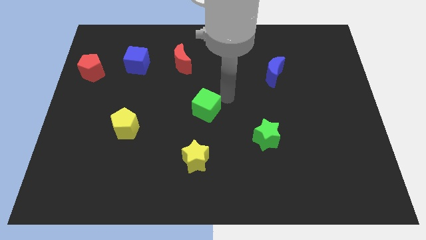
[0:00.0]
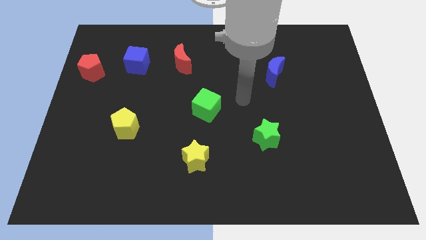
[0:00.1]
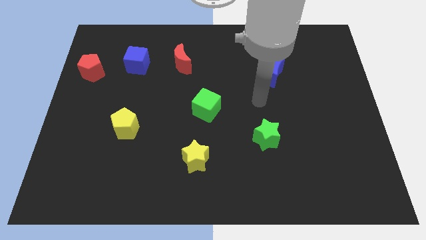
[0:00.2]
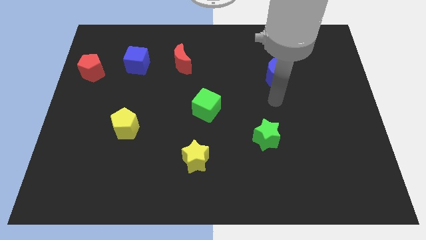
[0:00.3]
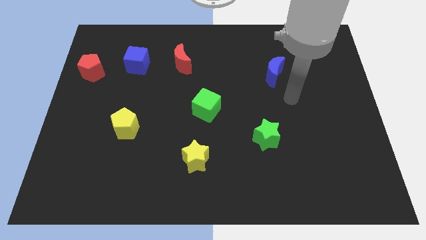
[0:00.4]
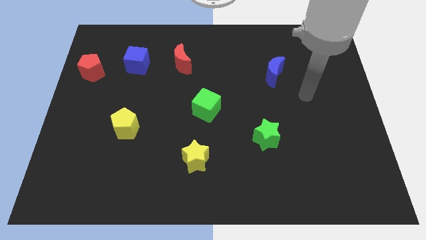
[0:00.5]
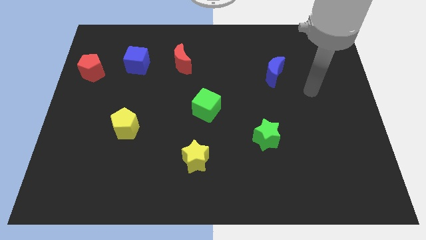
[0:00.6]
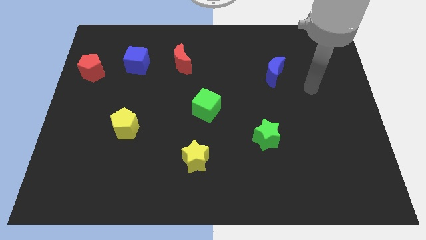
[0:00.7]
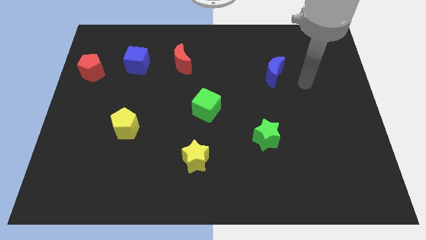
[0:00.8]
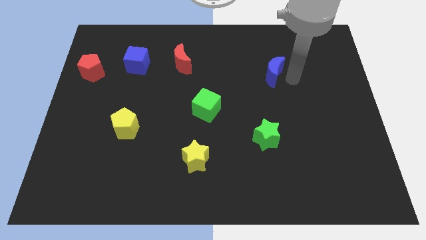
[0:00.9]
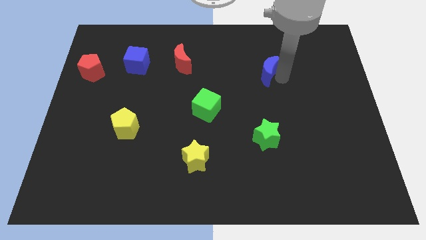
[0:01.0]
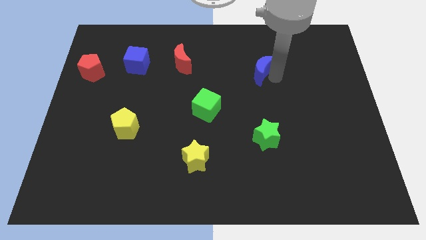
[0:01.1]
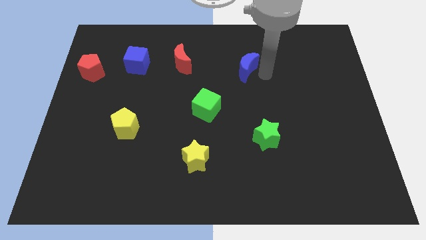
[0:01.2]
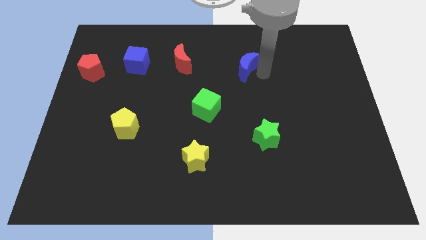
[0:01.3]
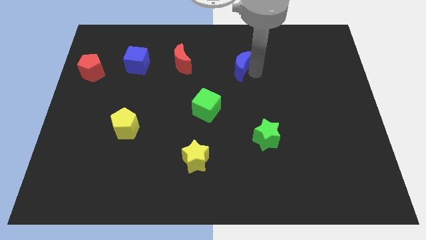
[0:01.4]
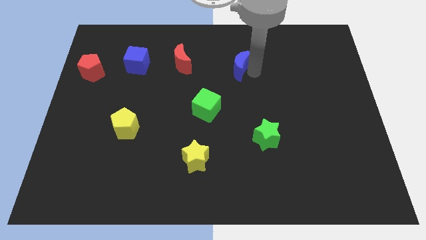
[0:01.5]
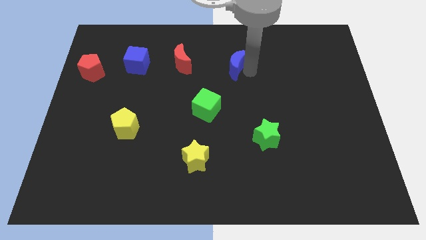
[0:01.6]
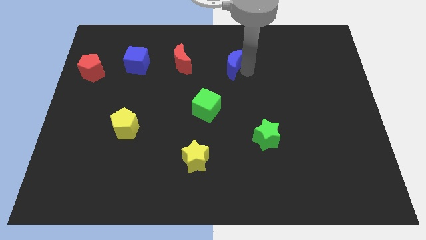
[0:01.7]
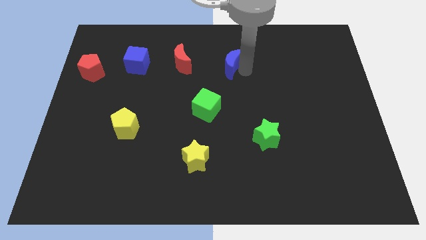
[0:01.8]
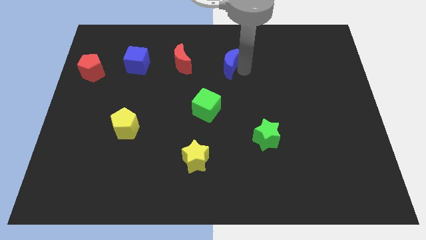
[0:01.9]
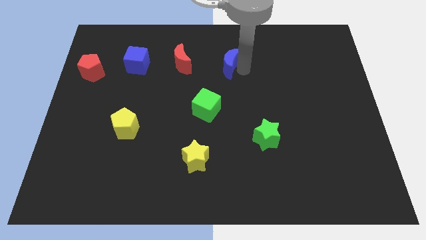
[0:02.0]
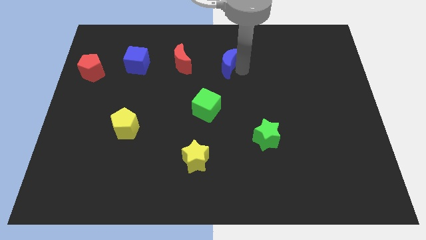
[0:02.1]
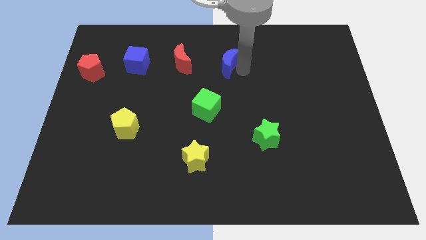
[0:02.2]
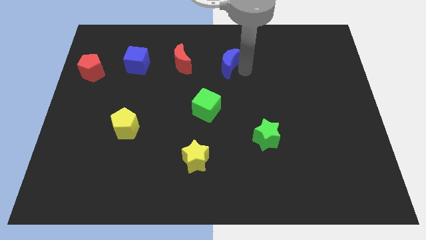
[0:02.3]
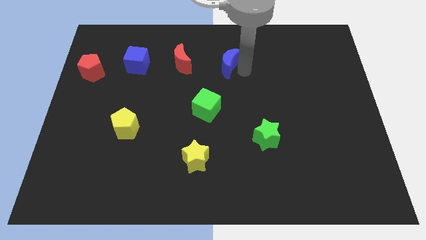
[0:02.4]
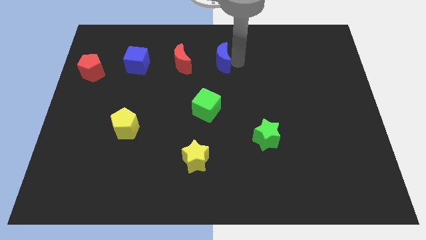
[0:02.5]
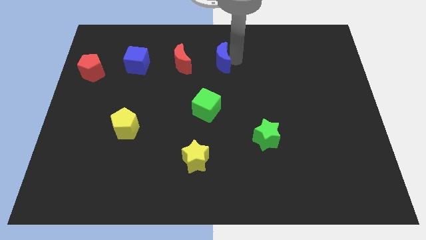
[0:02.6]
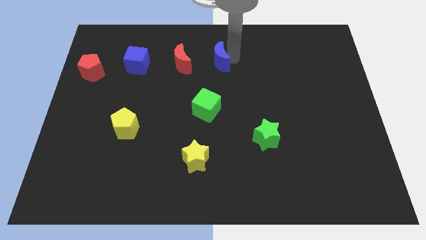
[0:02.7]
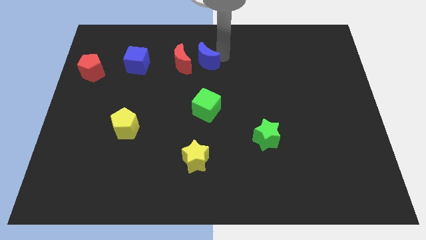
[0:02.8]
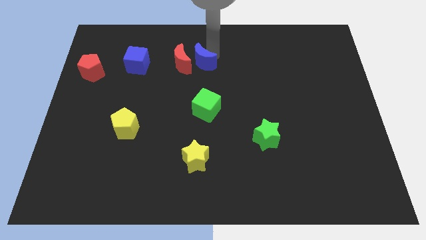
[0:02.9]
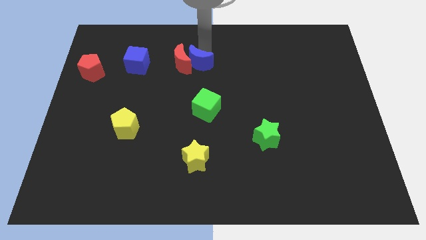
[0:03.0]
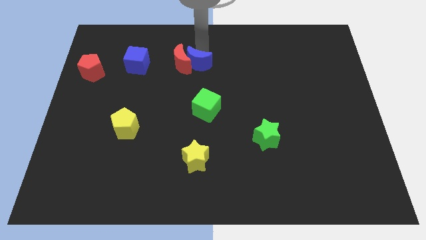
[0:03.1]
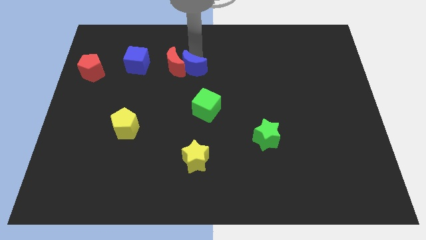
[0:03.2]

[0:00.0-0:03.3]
put the blue crescent into the red moon

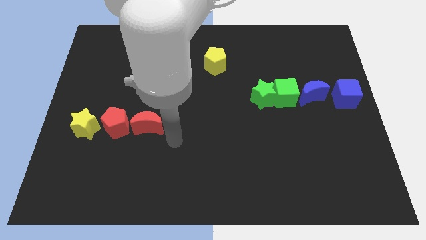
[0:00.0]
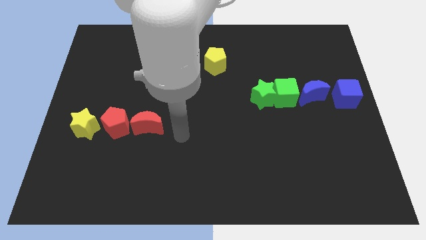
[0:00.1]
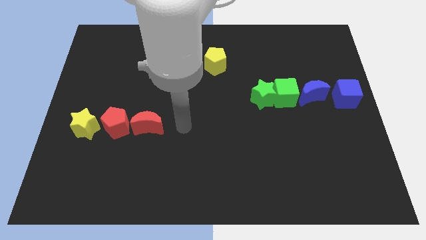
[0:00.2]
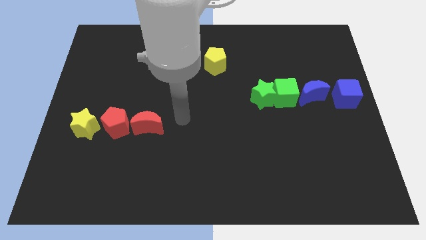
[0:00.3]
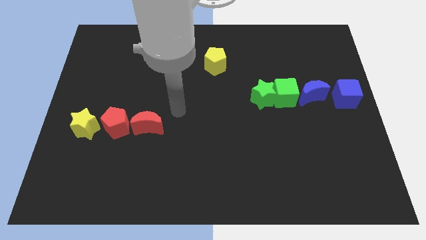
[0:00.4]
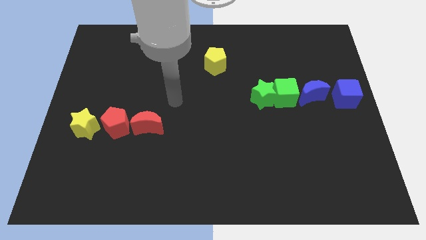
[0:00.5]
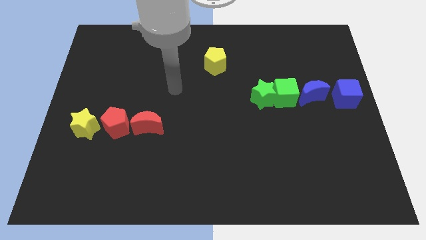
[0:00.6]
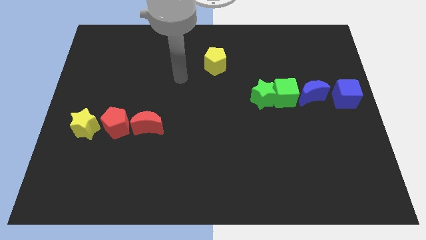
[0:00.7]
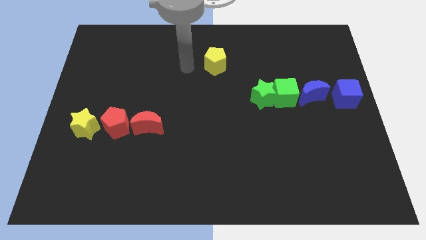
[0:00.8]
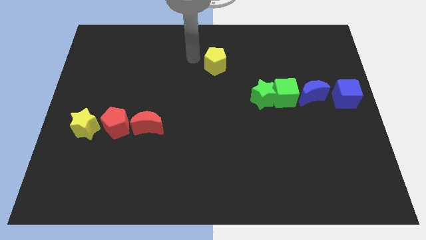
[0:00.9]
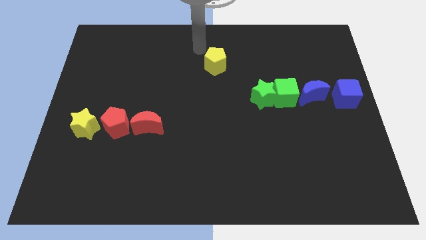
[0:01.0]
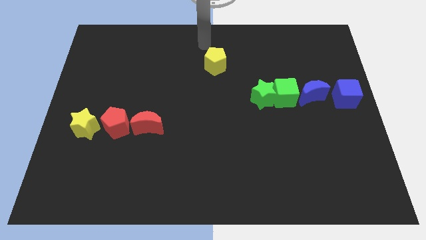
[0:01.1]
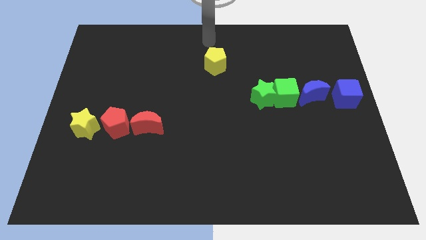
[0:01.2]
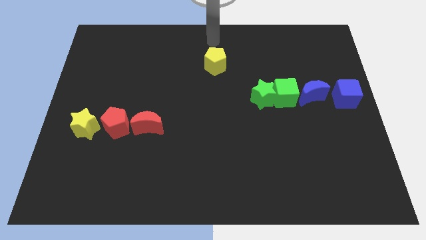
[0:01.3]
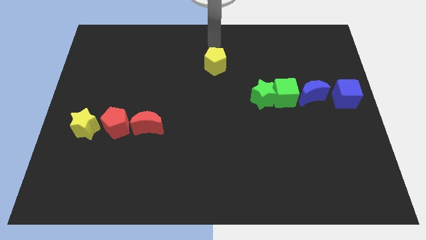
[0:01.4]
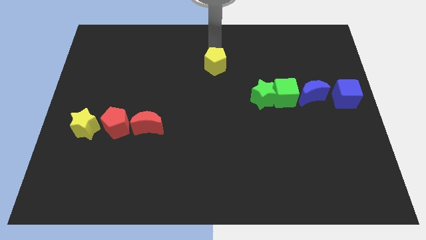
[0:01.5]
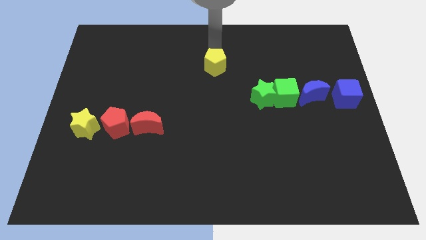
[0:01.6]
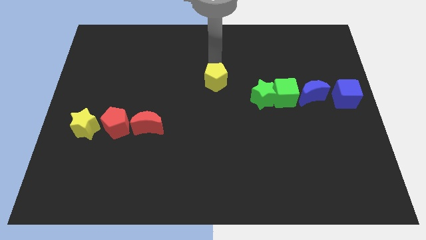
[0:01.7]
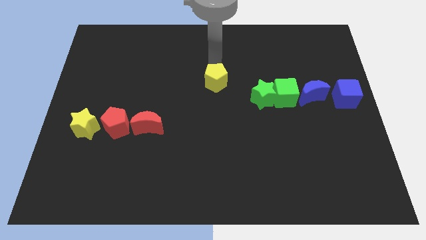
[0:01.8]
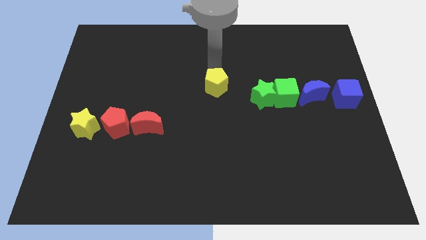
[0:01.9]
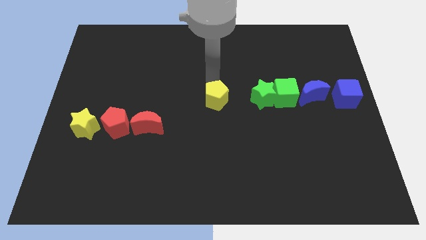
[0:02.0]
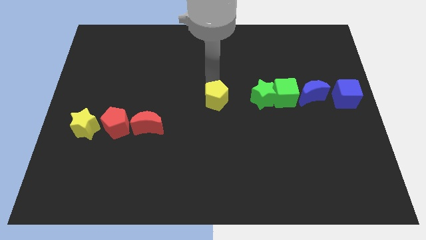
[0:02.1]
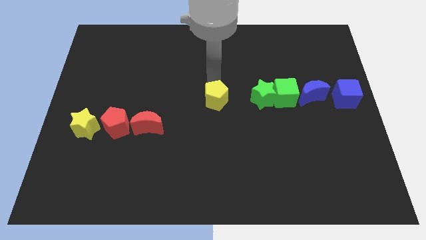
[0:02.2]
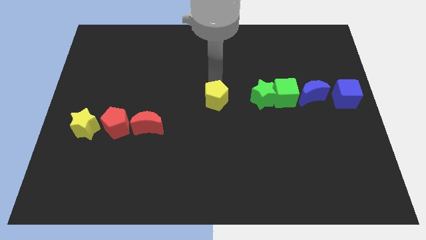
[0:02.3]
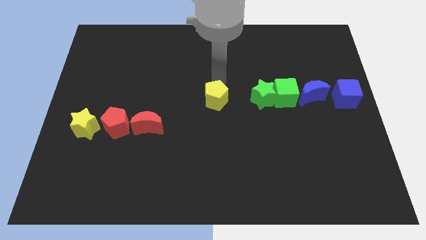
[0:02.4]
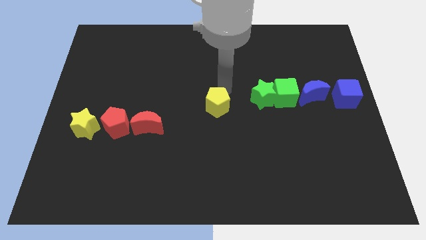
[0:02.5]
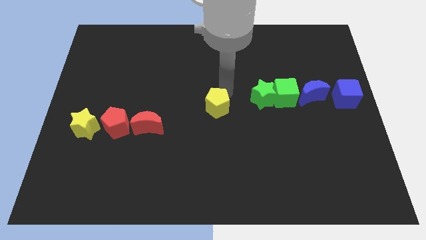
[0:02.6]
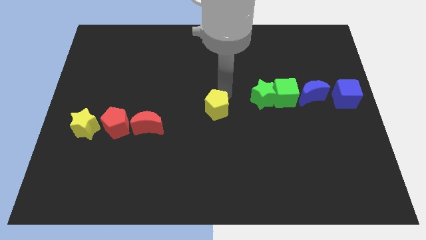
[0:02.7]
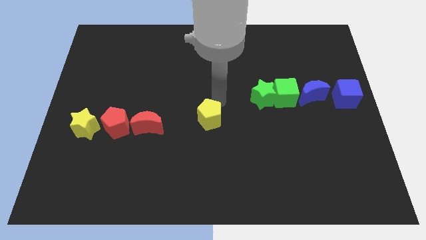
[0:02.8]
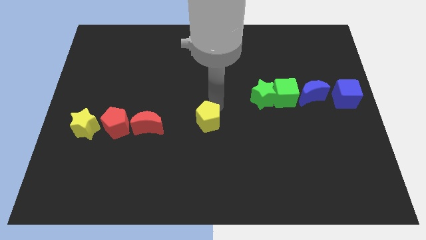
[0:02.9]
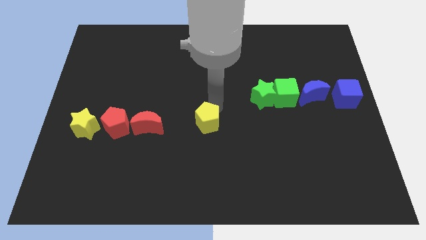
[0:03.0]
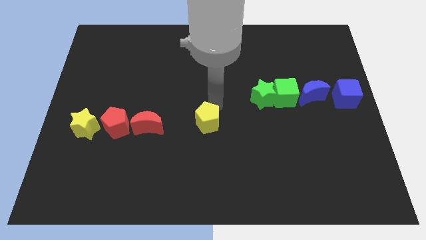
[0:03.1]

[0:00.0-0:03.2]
move the yellow pentagon to the center of the board

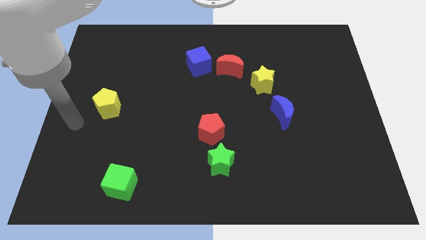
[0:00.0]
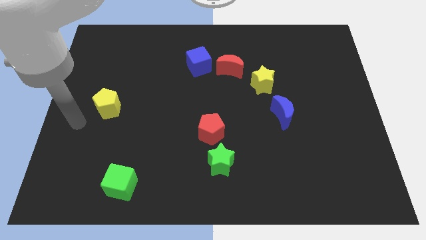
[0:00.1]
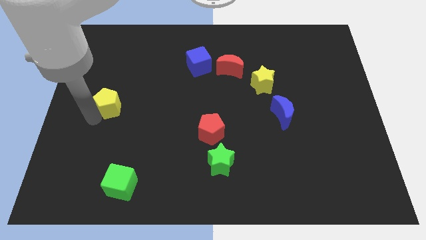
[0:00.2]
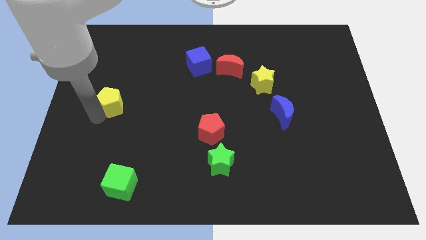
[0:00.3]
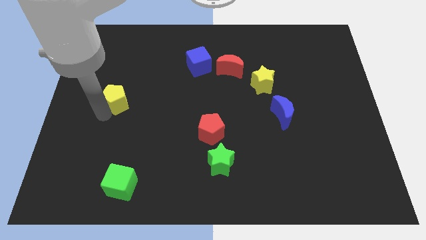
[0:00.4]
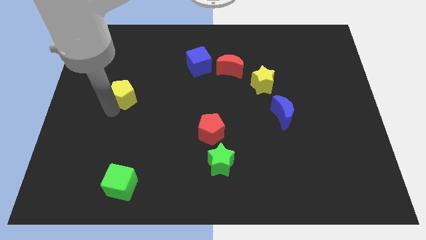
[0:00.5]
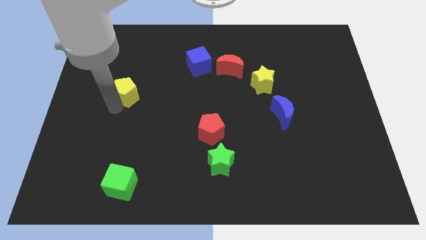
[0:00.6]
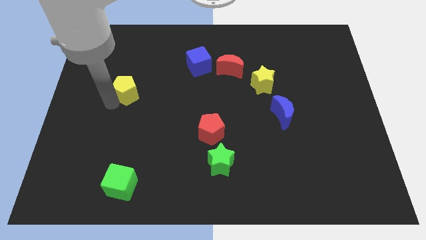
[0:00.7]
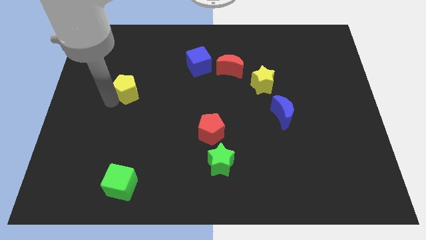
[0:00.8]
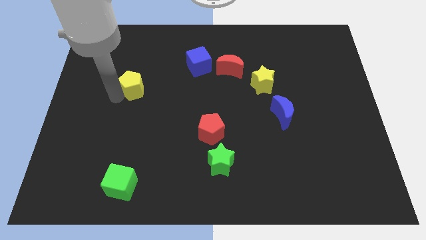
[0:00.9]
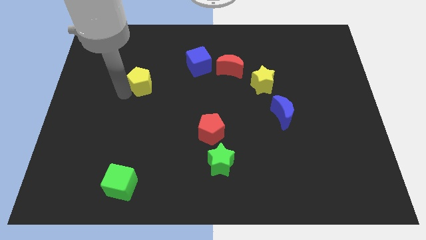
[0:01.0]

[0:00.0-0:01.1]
move yellow pentagon towards left side of blue cube

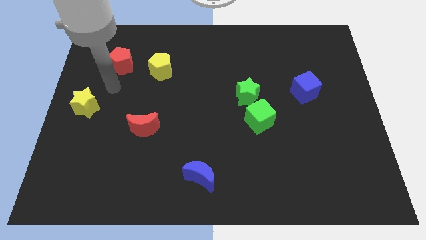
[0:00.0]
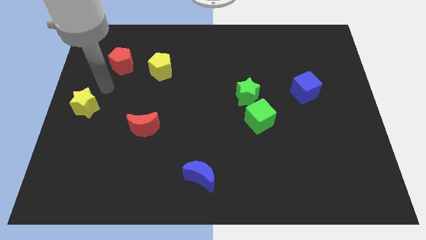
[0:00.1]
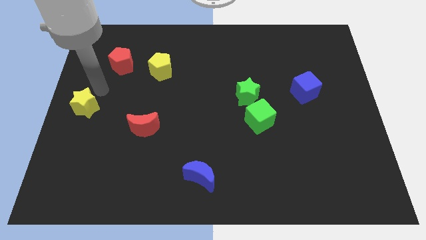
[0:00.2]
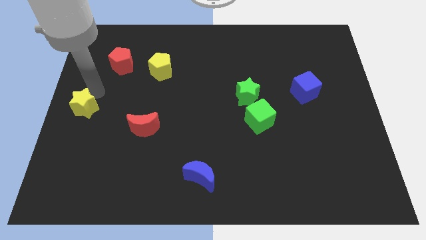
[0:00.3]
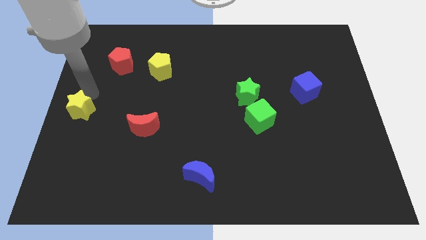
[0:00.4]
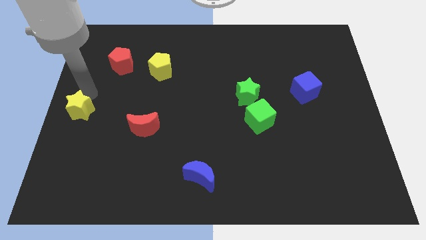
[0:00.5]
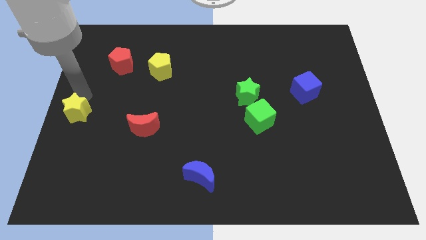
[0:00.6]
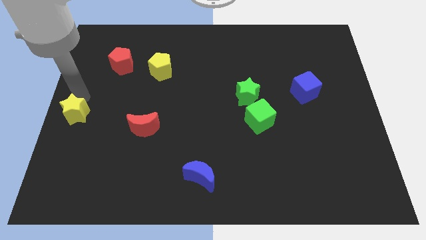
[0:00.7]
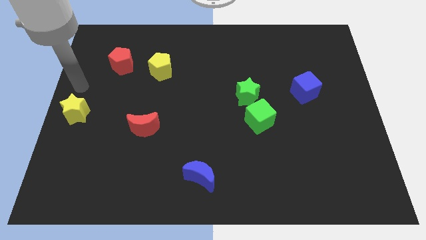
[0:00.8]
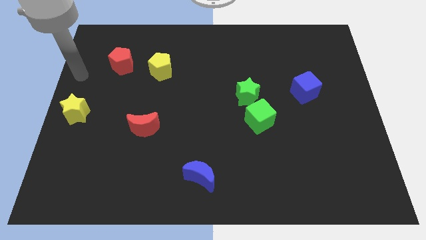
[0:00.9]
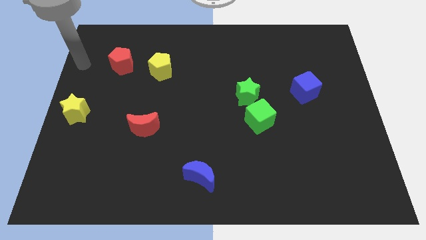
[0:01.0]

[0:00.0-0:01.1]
move the yellow star slightly to the bottom

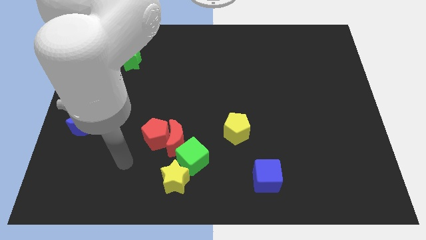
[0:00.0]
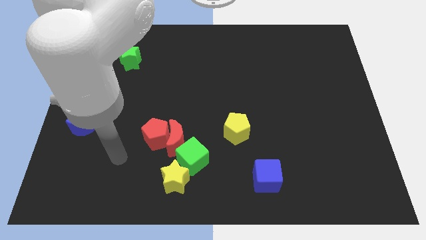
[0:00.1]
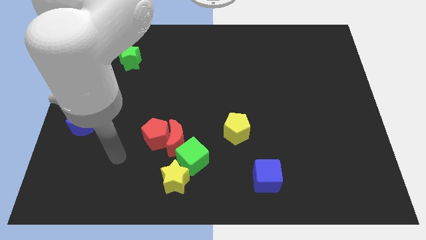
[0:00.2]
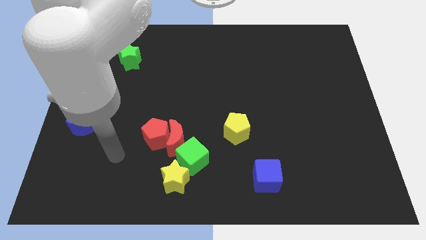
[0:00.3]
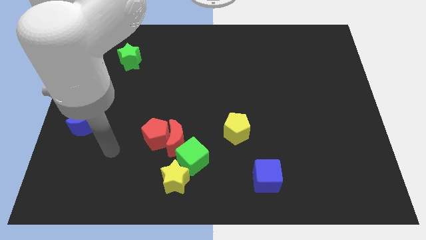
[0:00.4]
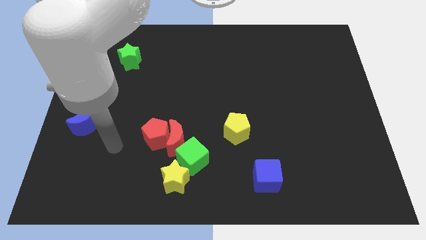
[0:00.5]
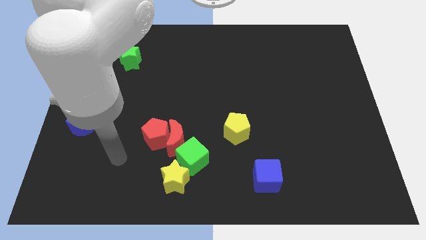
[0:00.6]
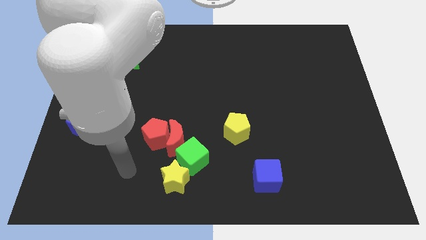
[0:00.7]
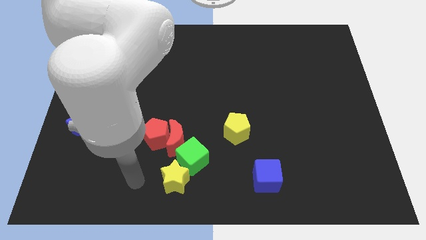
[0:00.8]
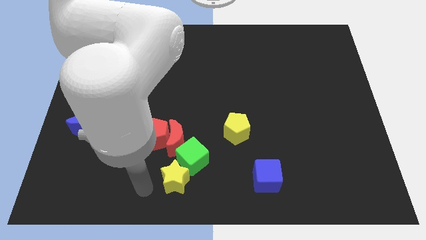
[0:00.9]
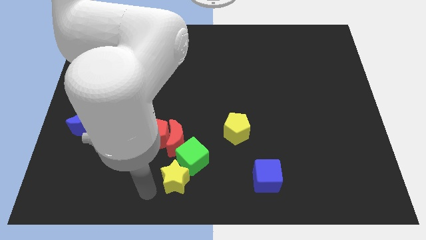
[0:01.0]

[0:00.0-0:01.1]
move your arm to the bottom left of the yellow star
